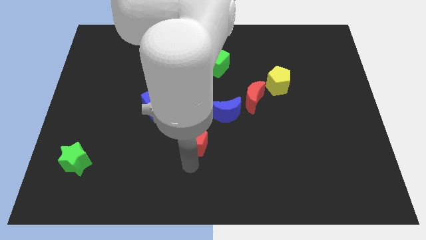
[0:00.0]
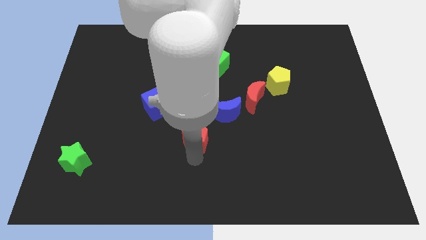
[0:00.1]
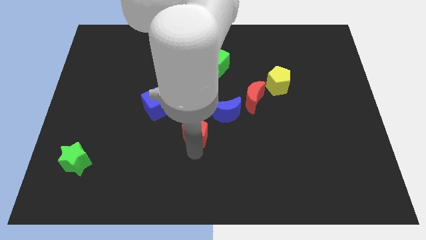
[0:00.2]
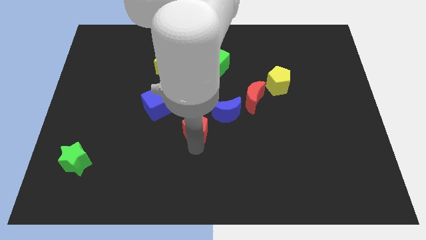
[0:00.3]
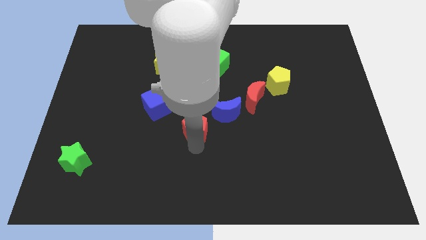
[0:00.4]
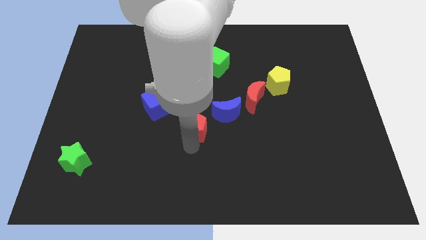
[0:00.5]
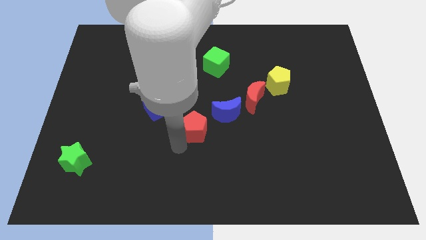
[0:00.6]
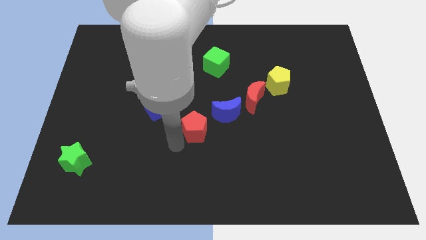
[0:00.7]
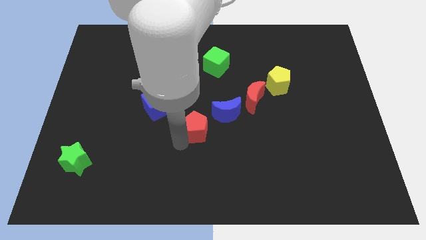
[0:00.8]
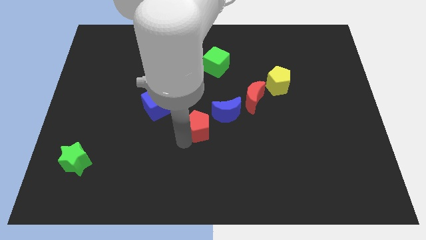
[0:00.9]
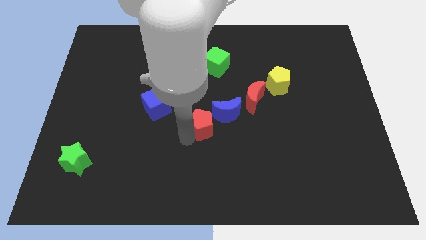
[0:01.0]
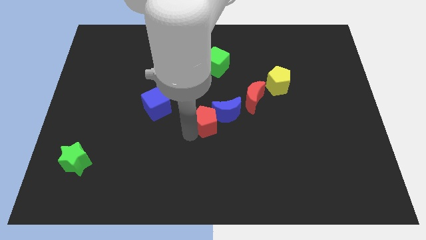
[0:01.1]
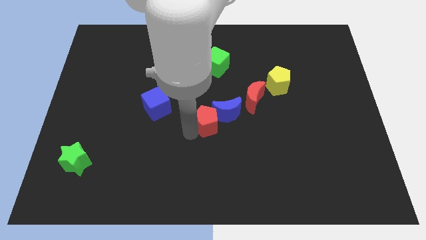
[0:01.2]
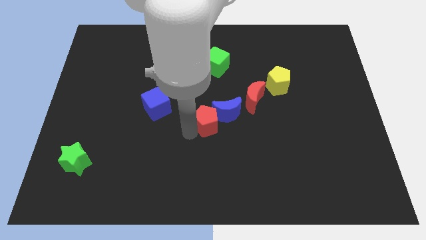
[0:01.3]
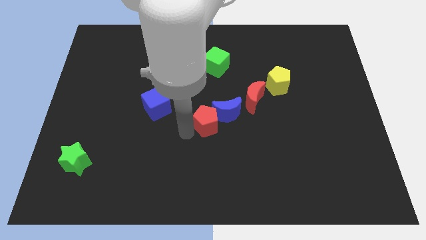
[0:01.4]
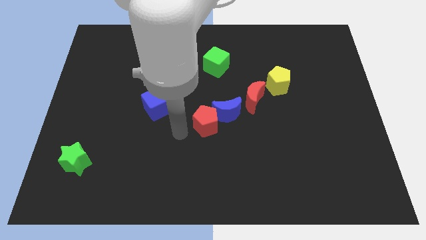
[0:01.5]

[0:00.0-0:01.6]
slide the red pentagon into the blue moon

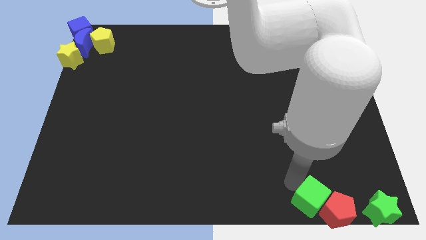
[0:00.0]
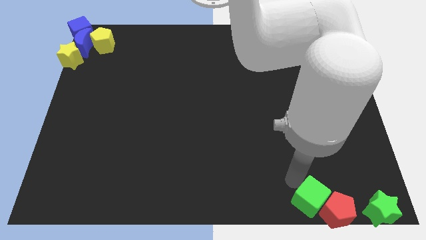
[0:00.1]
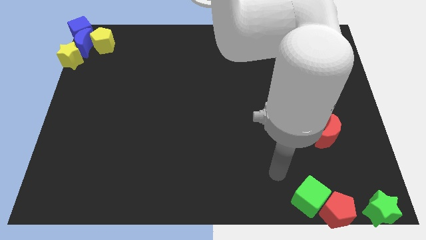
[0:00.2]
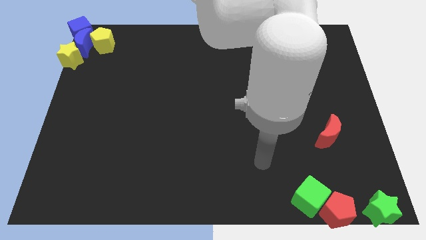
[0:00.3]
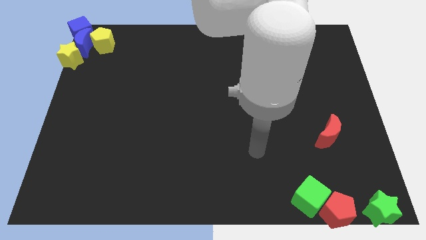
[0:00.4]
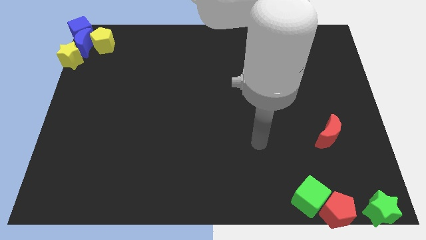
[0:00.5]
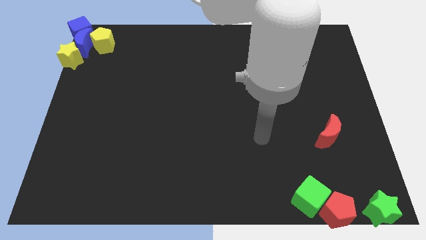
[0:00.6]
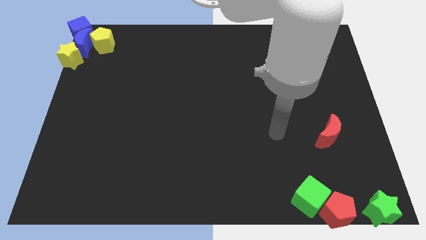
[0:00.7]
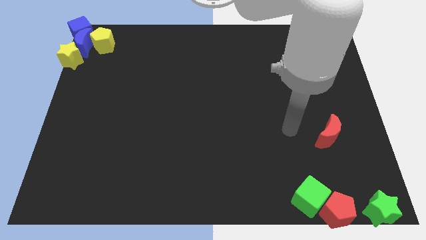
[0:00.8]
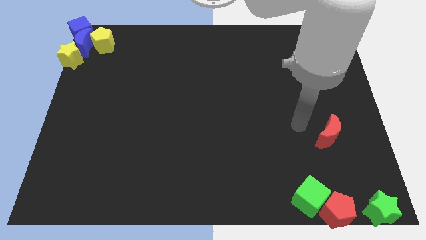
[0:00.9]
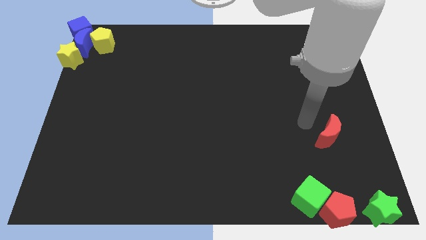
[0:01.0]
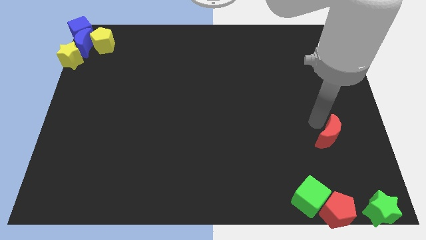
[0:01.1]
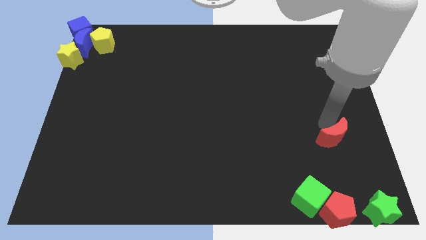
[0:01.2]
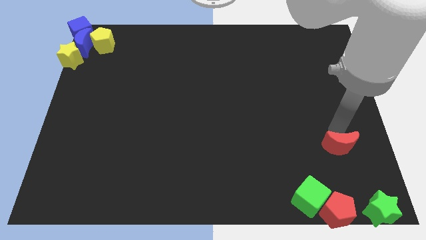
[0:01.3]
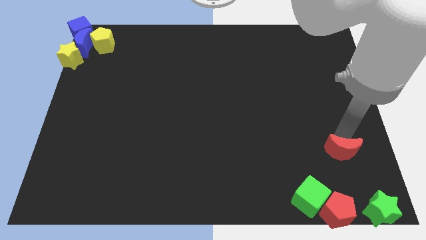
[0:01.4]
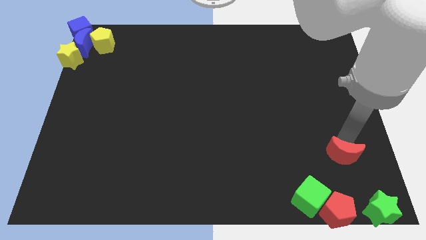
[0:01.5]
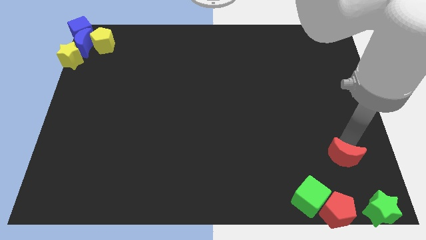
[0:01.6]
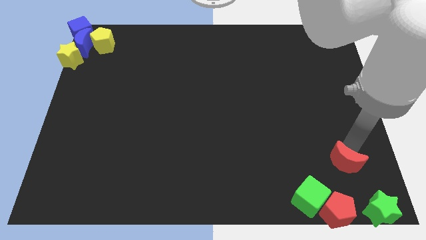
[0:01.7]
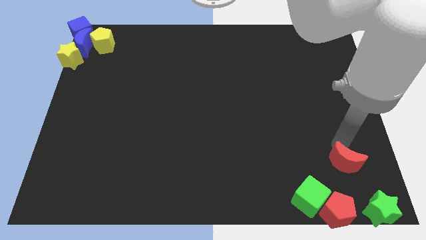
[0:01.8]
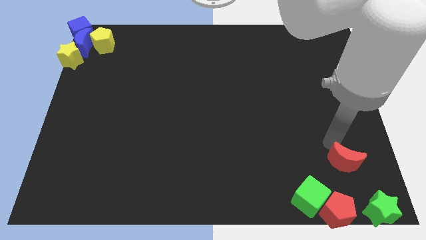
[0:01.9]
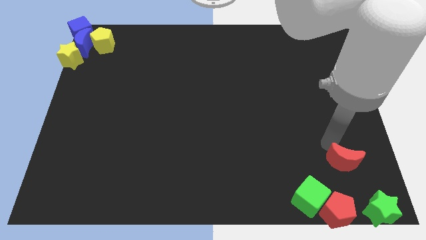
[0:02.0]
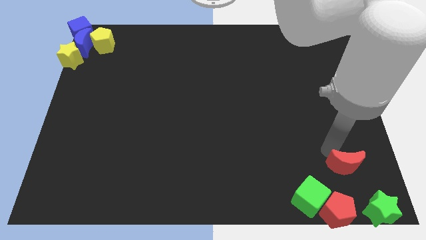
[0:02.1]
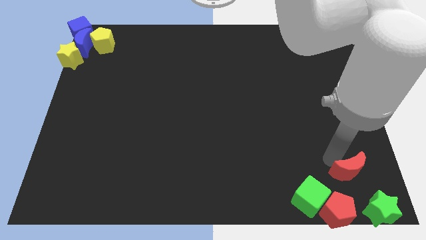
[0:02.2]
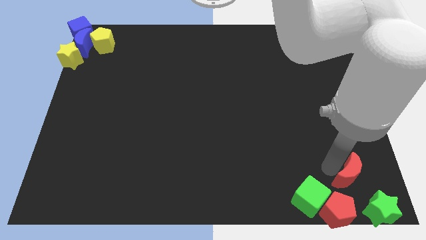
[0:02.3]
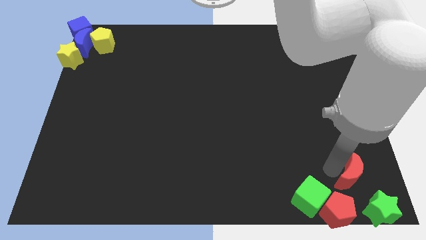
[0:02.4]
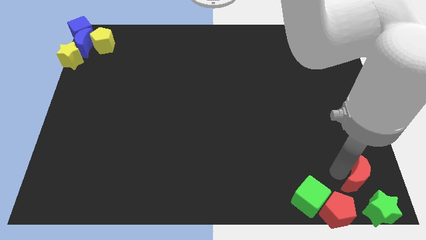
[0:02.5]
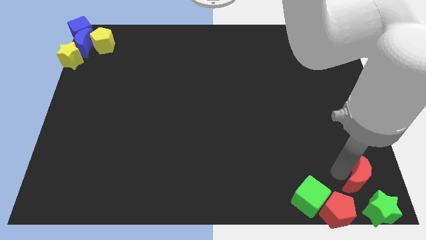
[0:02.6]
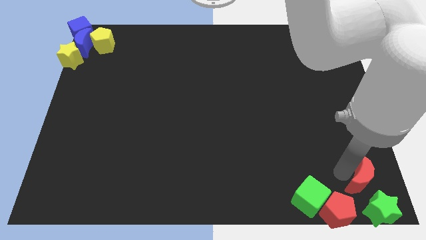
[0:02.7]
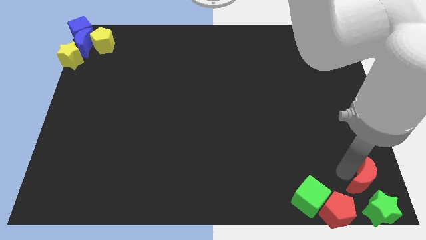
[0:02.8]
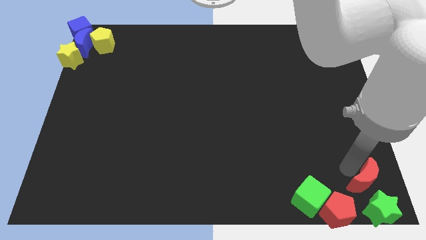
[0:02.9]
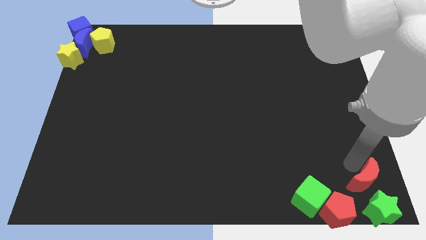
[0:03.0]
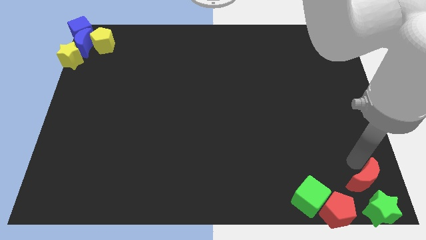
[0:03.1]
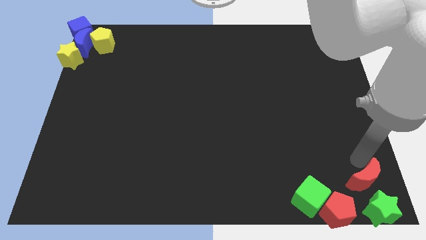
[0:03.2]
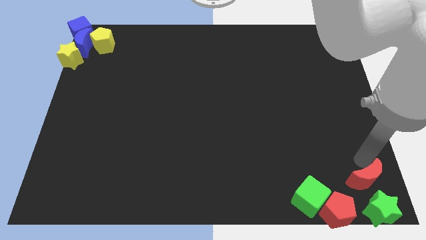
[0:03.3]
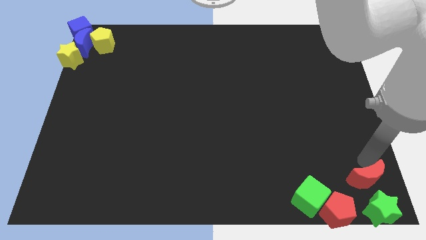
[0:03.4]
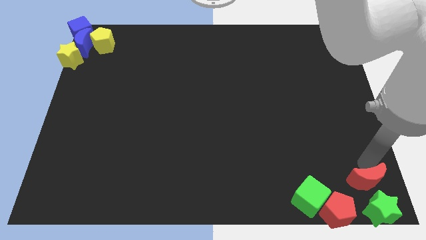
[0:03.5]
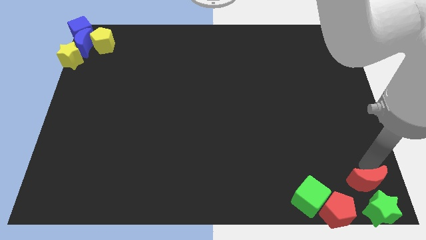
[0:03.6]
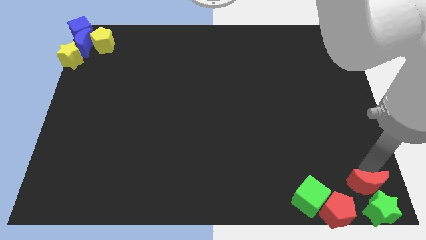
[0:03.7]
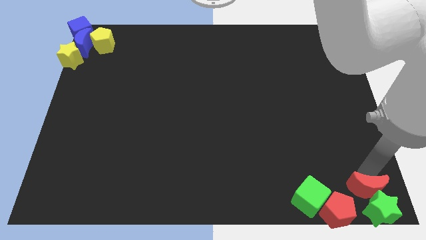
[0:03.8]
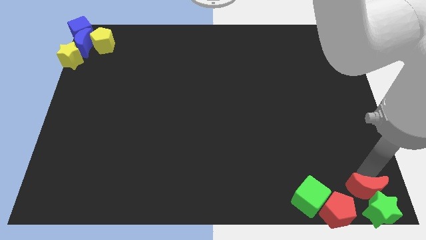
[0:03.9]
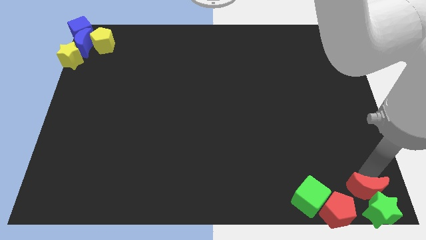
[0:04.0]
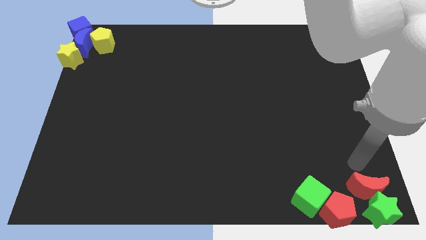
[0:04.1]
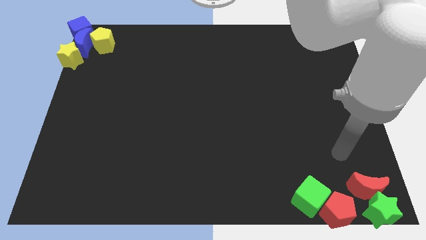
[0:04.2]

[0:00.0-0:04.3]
push the red crescent into the green star

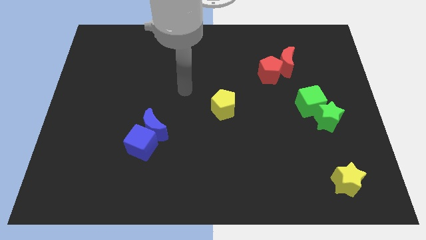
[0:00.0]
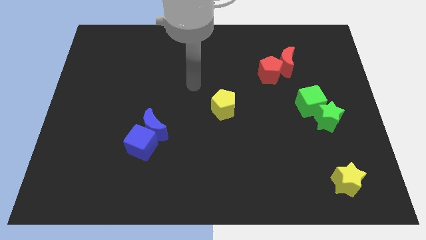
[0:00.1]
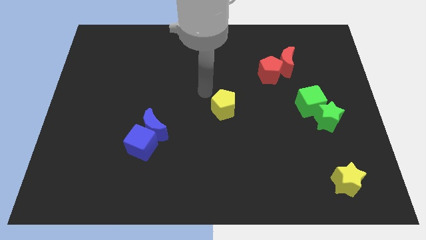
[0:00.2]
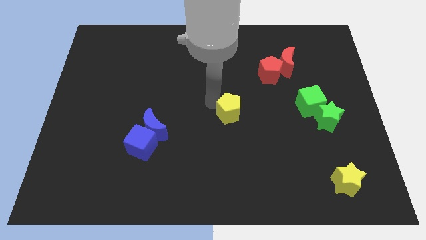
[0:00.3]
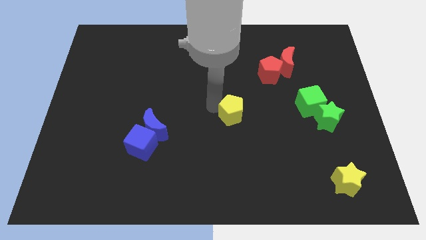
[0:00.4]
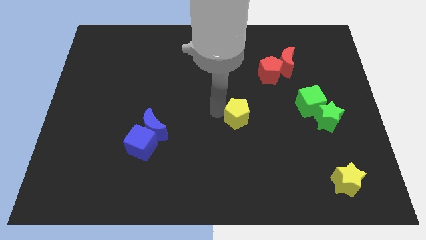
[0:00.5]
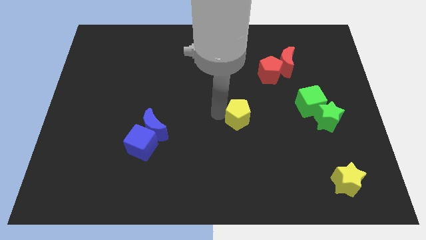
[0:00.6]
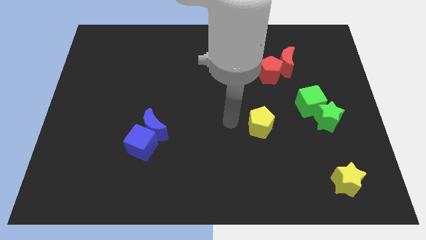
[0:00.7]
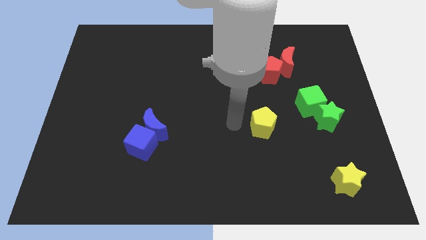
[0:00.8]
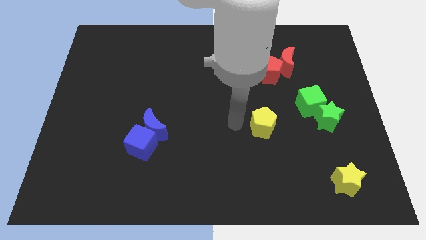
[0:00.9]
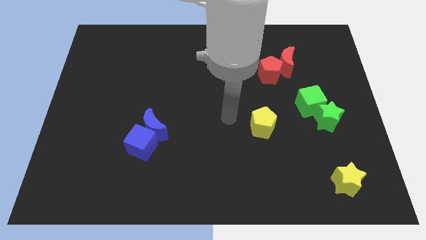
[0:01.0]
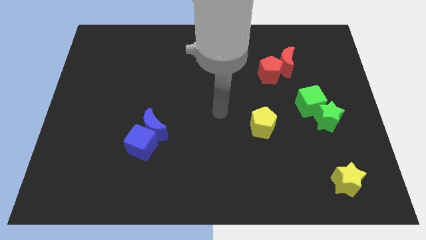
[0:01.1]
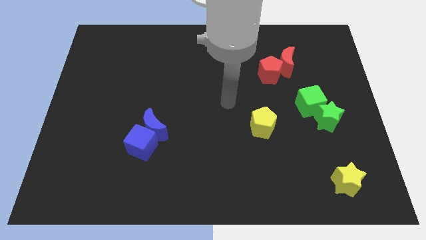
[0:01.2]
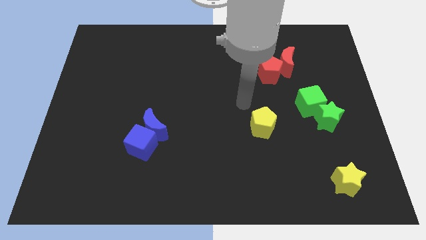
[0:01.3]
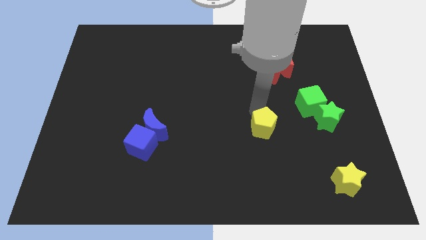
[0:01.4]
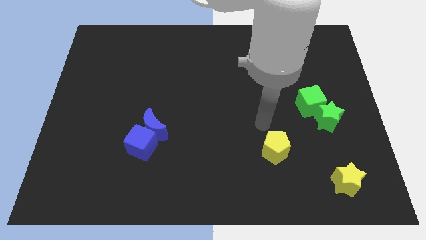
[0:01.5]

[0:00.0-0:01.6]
push the yellow pentagon to the bottom left of the green cube

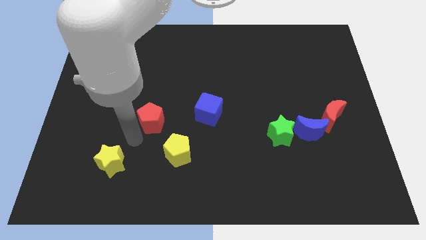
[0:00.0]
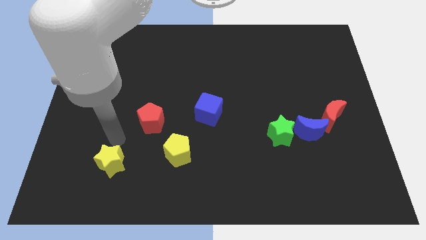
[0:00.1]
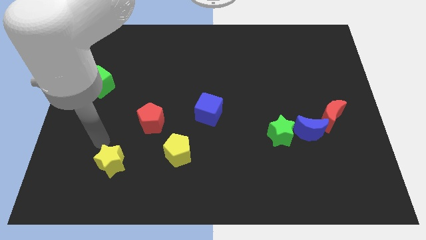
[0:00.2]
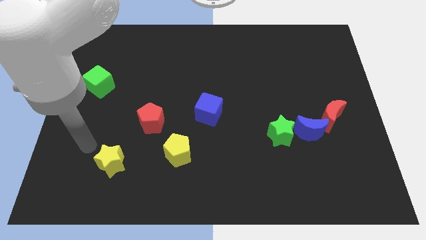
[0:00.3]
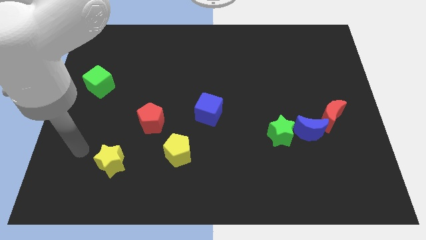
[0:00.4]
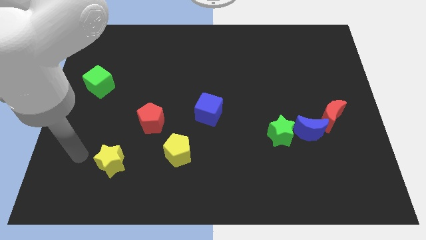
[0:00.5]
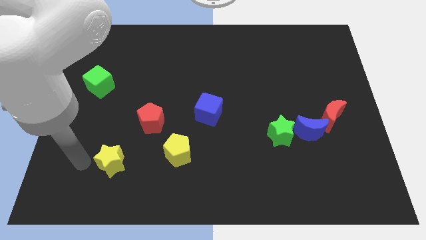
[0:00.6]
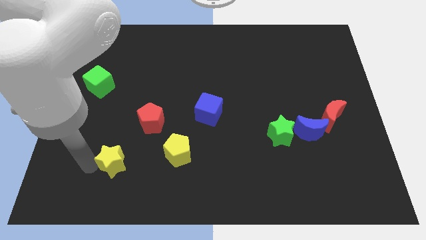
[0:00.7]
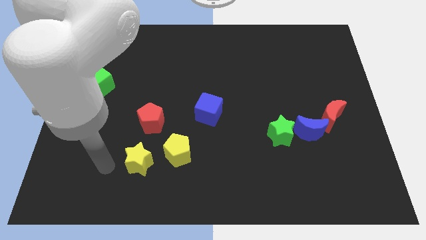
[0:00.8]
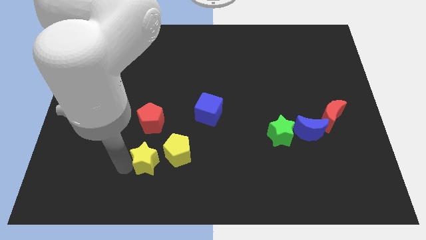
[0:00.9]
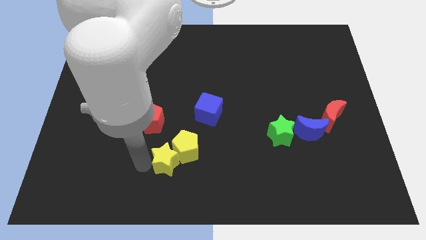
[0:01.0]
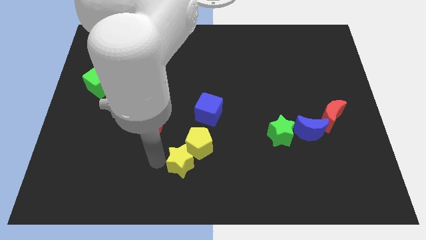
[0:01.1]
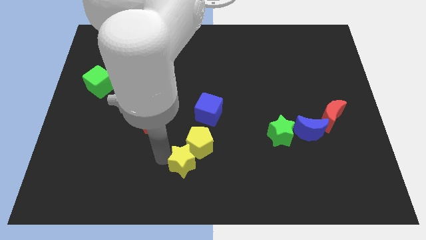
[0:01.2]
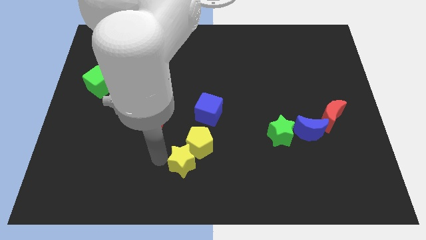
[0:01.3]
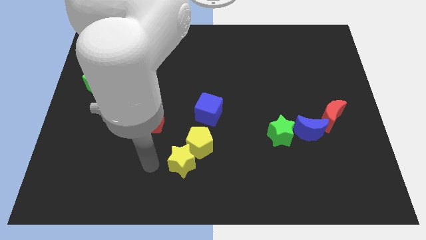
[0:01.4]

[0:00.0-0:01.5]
push the yellow star into the yellow pentagon
